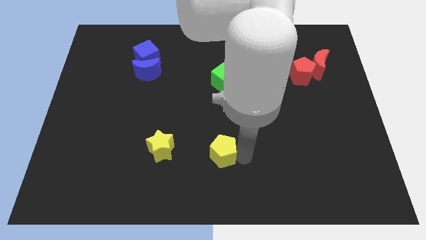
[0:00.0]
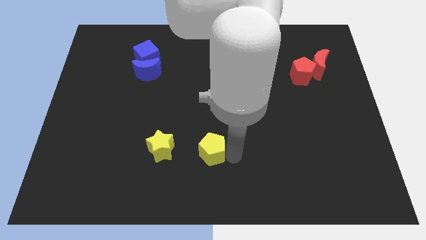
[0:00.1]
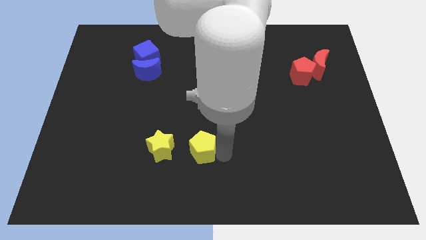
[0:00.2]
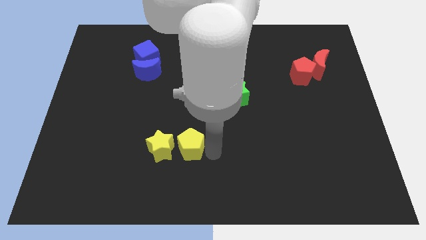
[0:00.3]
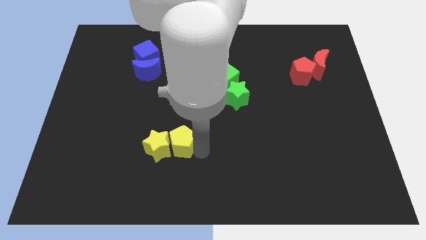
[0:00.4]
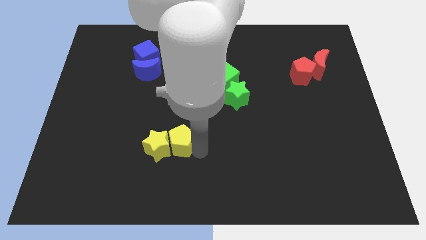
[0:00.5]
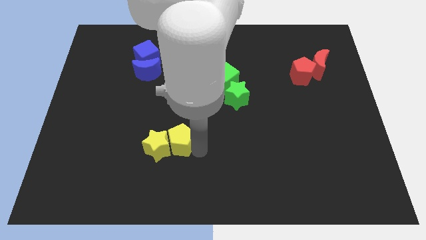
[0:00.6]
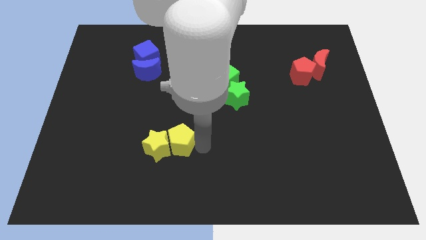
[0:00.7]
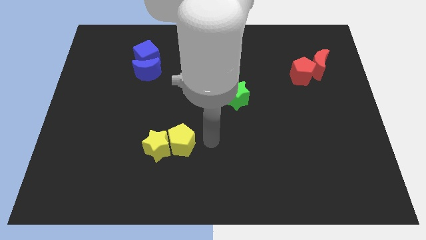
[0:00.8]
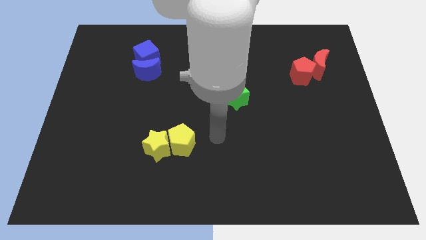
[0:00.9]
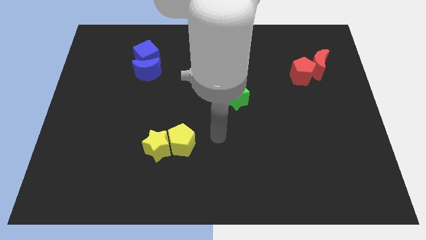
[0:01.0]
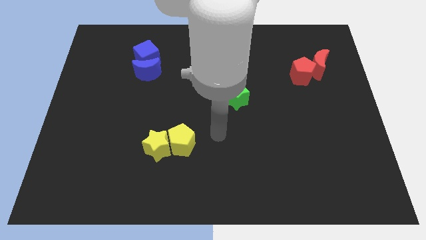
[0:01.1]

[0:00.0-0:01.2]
push the yellow pentagon into the yellow star

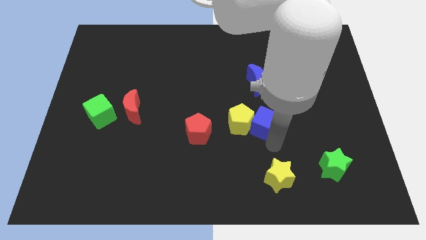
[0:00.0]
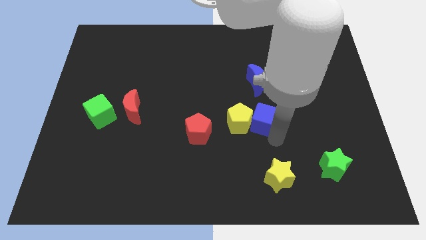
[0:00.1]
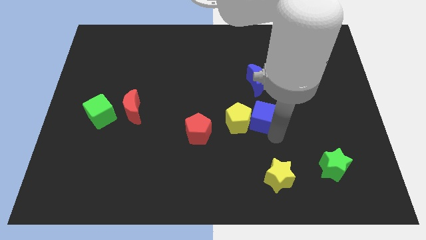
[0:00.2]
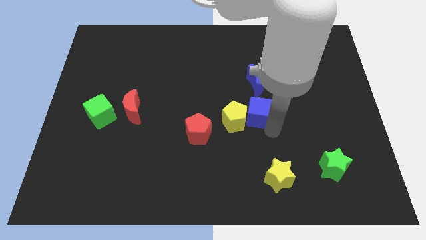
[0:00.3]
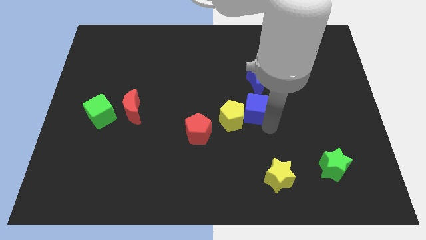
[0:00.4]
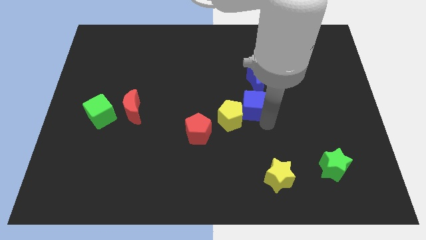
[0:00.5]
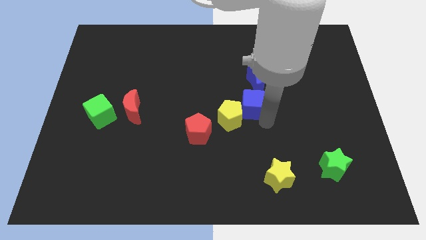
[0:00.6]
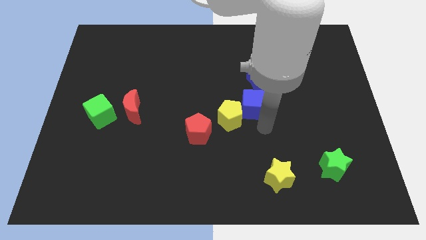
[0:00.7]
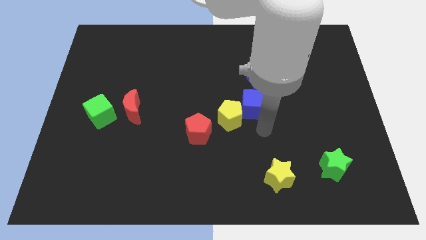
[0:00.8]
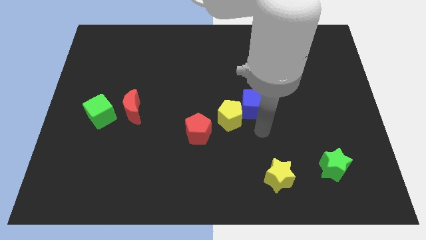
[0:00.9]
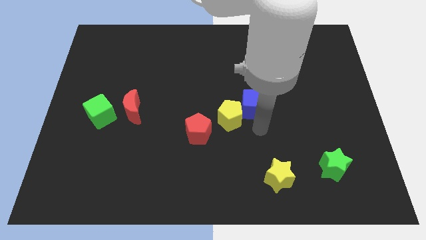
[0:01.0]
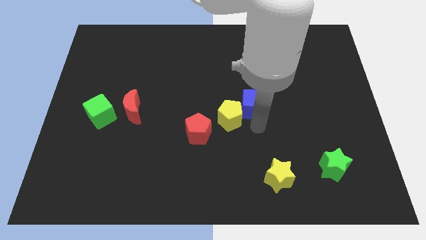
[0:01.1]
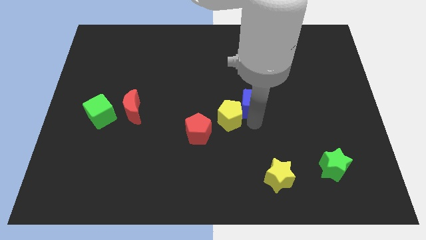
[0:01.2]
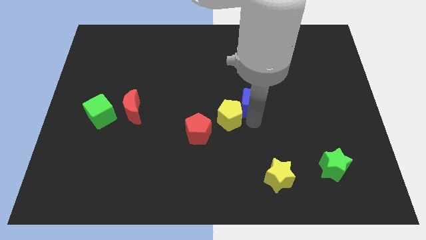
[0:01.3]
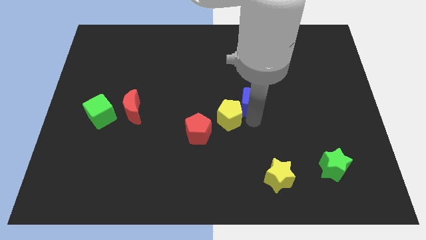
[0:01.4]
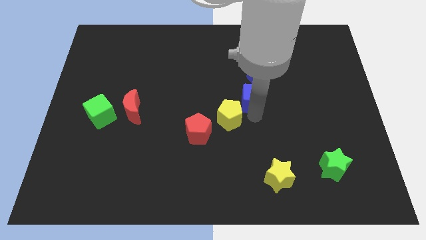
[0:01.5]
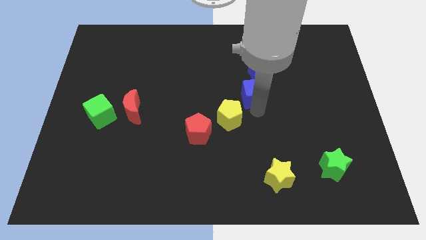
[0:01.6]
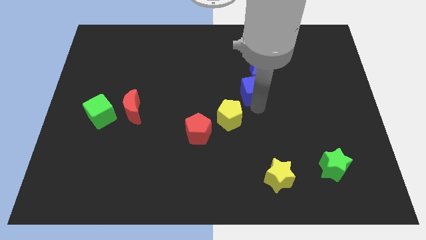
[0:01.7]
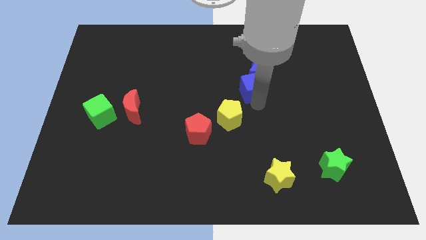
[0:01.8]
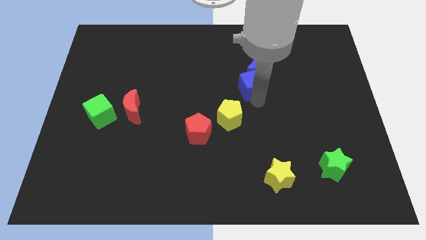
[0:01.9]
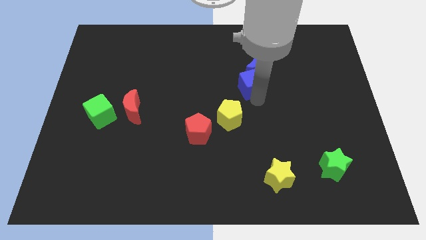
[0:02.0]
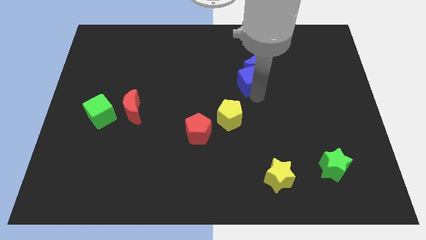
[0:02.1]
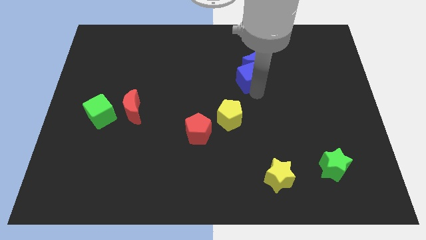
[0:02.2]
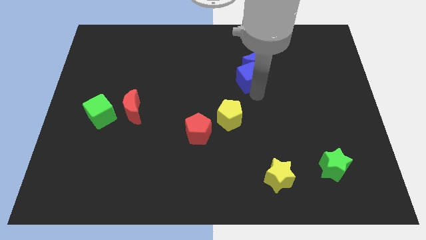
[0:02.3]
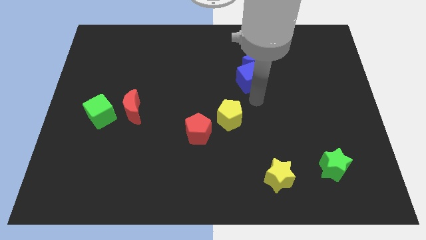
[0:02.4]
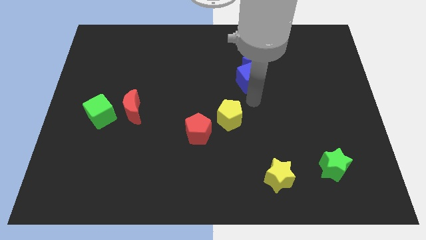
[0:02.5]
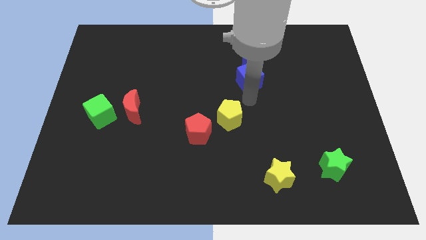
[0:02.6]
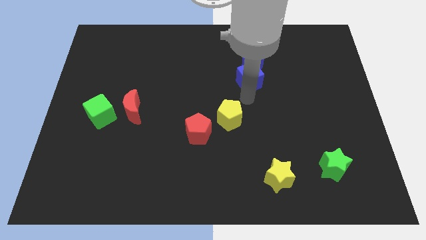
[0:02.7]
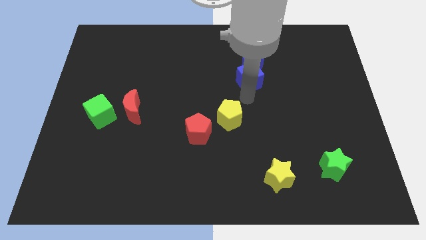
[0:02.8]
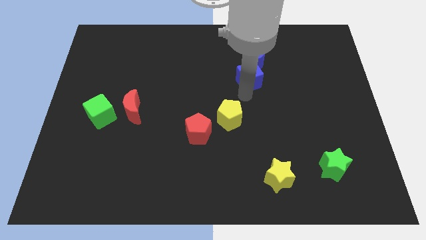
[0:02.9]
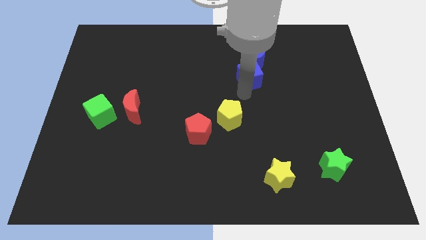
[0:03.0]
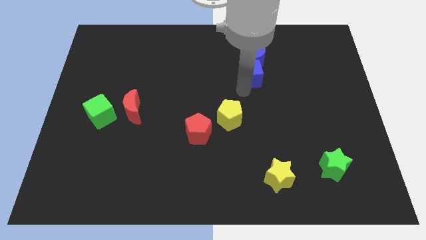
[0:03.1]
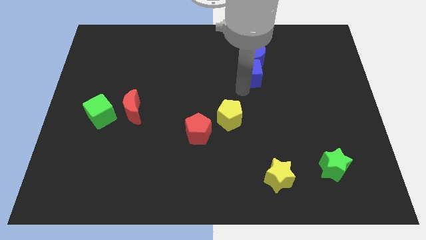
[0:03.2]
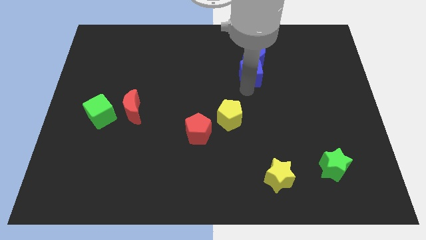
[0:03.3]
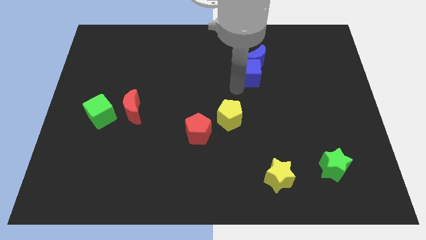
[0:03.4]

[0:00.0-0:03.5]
push the blue cube into the blue crescent

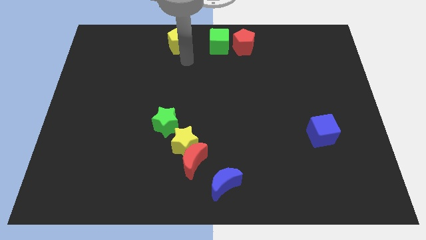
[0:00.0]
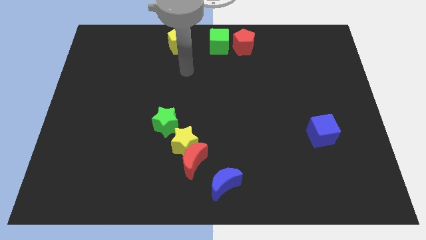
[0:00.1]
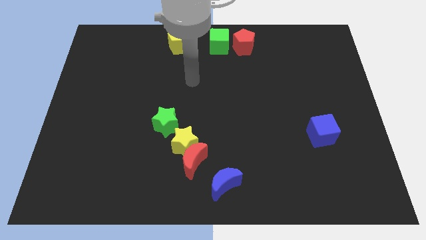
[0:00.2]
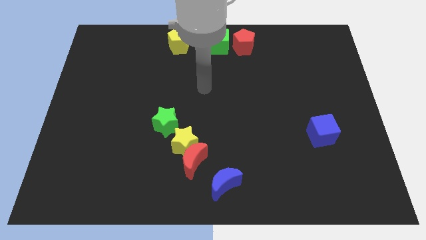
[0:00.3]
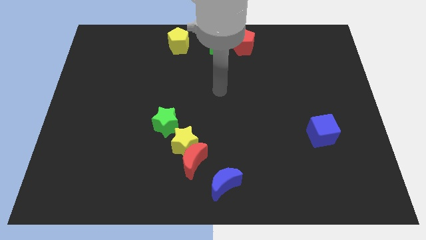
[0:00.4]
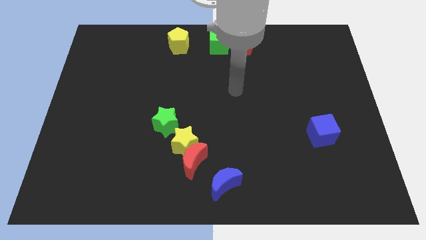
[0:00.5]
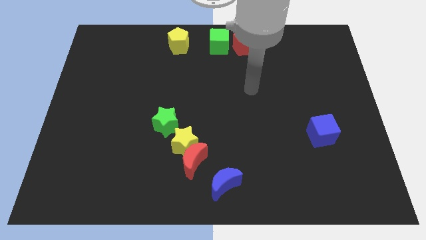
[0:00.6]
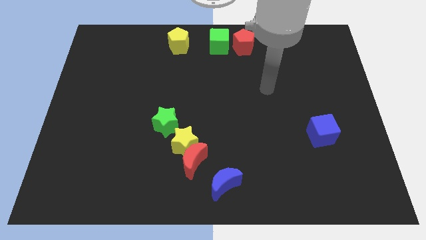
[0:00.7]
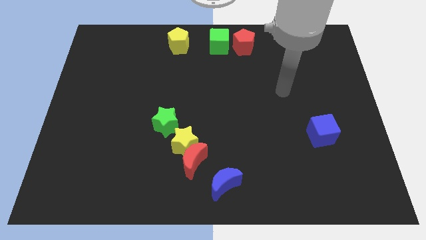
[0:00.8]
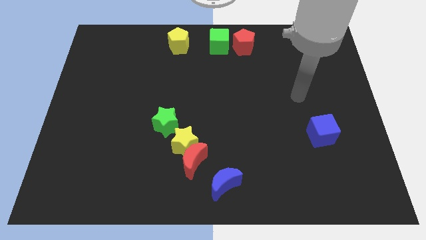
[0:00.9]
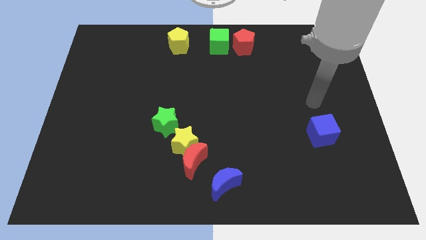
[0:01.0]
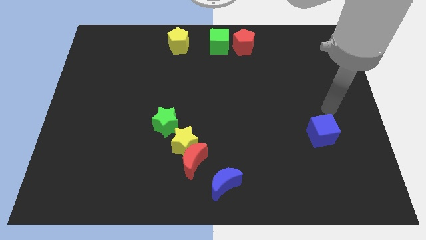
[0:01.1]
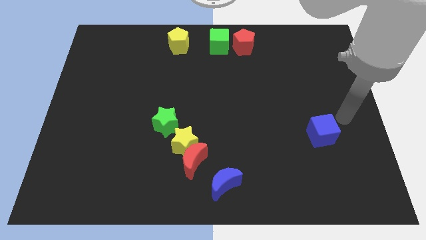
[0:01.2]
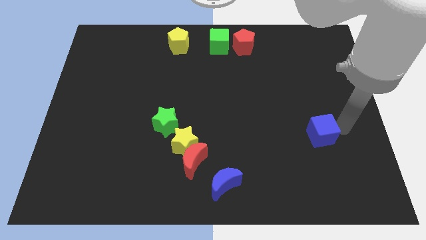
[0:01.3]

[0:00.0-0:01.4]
point the arm to the right of the blue cube

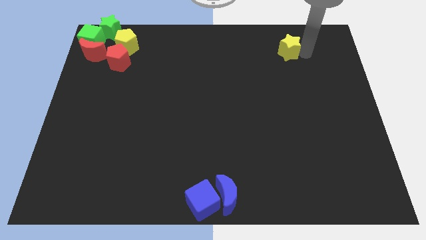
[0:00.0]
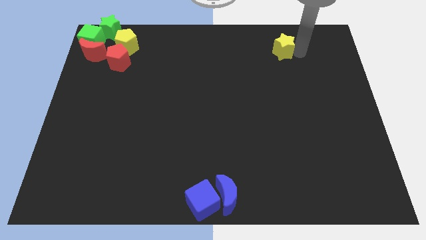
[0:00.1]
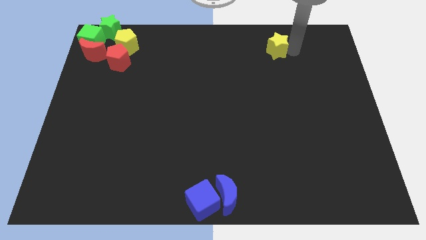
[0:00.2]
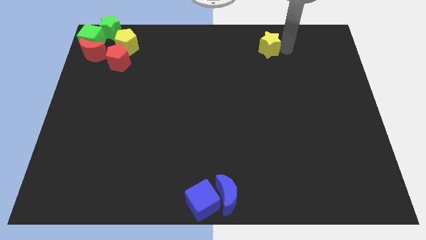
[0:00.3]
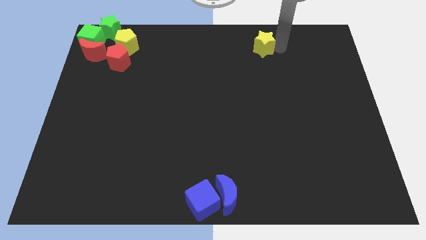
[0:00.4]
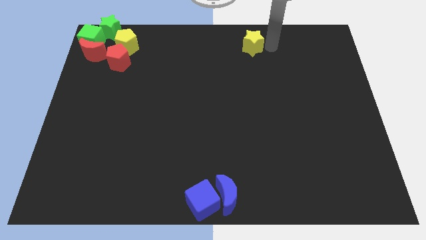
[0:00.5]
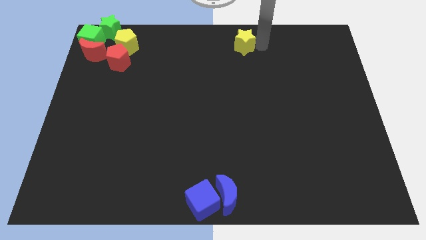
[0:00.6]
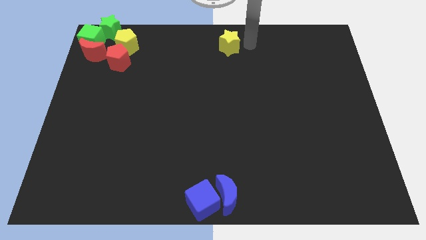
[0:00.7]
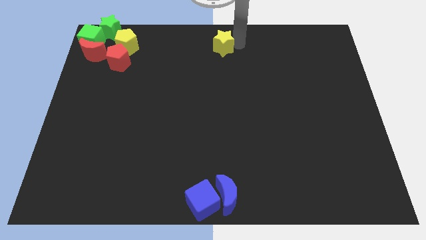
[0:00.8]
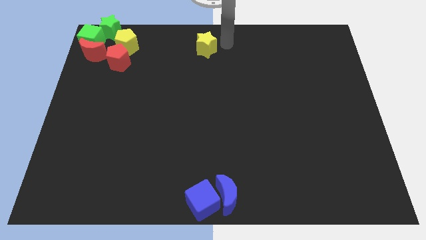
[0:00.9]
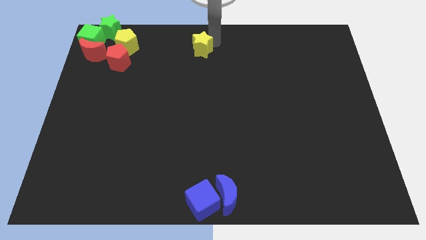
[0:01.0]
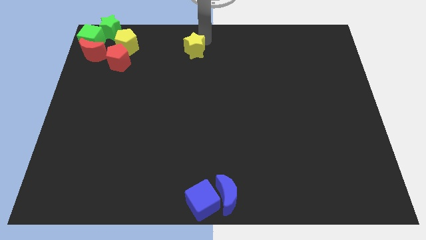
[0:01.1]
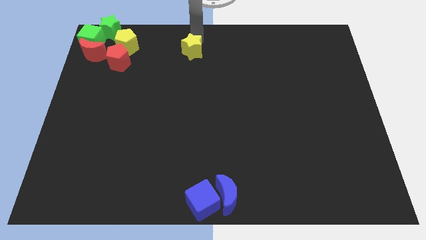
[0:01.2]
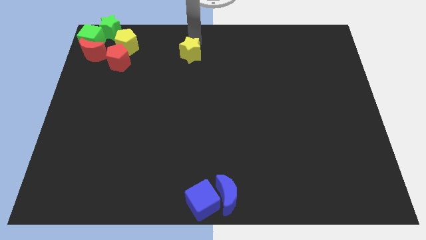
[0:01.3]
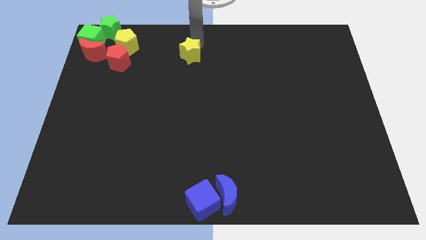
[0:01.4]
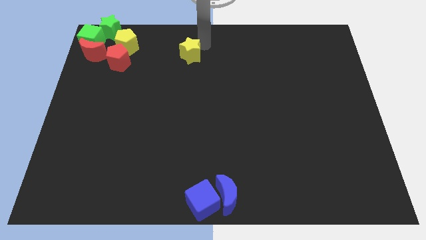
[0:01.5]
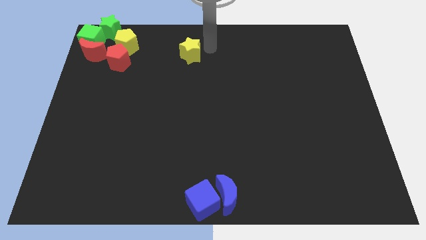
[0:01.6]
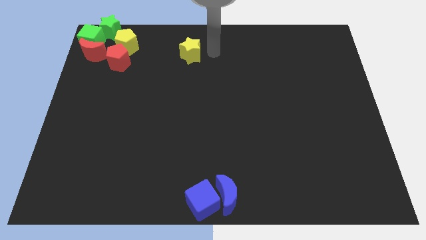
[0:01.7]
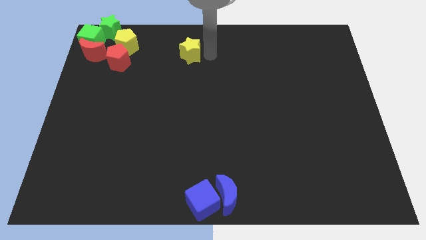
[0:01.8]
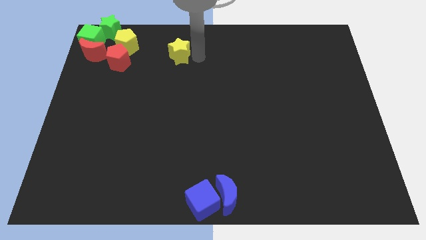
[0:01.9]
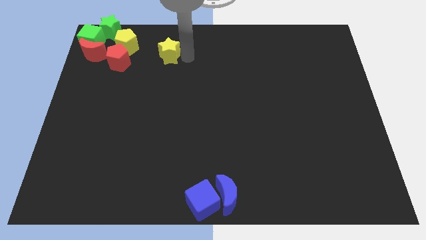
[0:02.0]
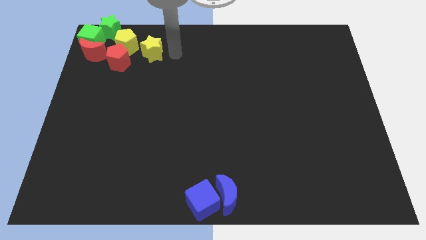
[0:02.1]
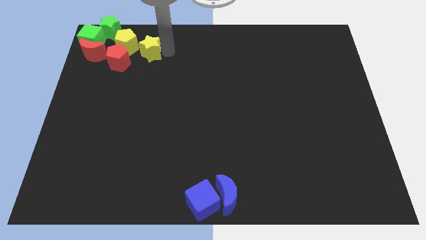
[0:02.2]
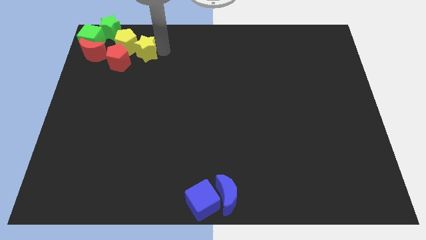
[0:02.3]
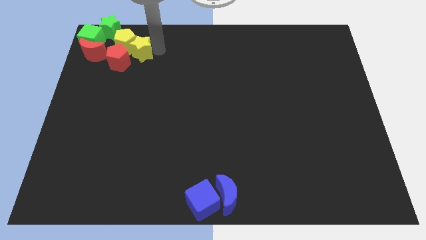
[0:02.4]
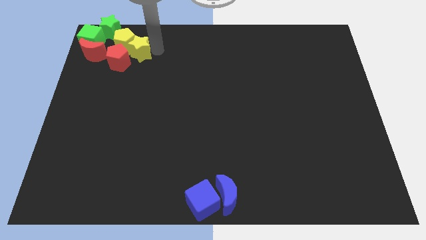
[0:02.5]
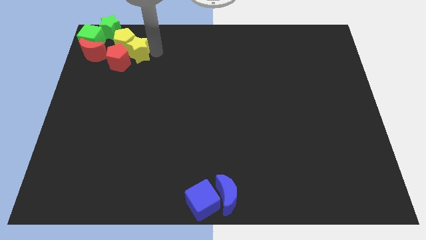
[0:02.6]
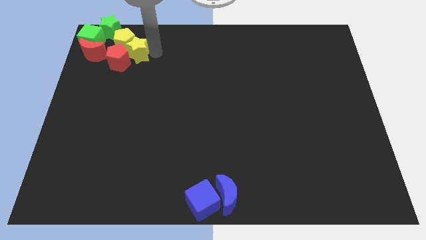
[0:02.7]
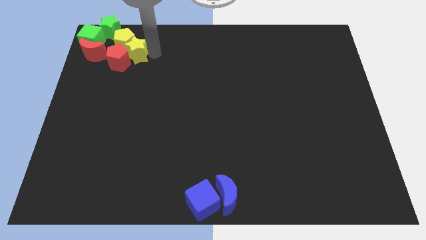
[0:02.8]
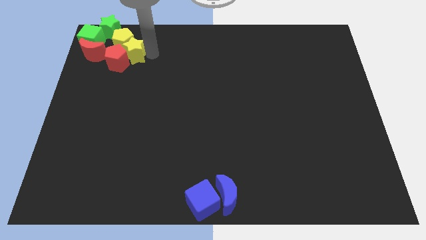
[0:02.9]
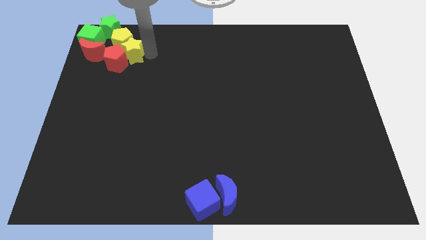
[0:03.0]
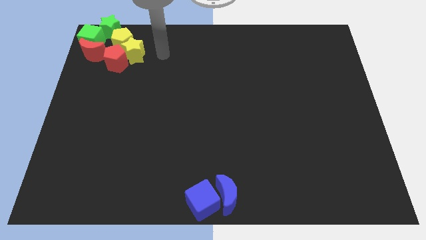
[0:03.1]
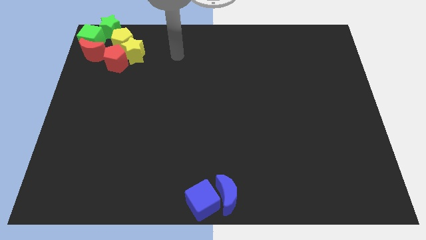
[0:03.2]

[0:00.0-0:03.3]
slide yellow star into yellow pentagon
